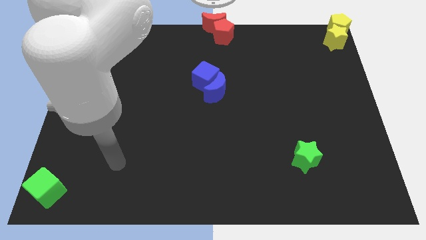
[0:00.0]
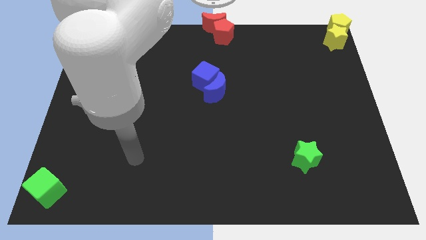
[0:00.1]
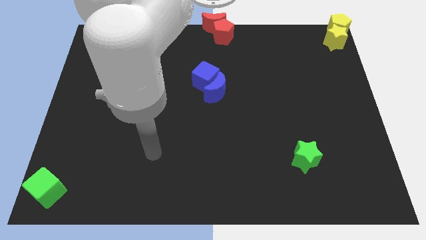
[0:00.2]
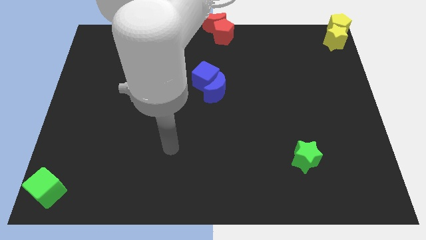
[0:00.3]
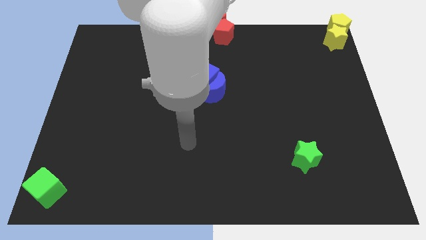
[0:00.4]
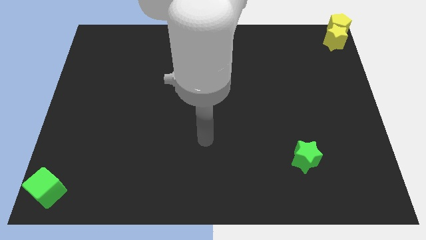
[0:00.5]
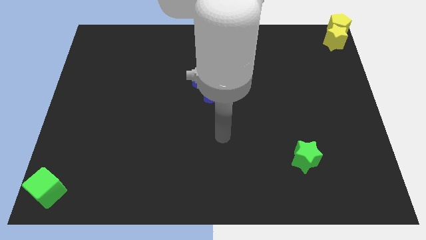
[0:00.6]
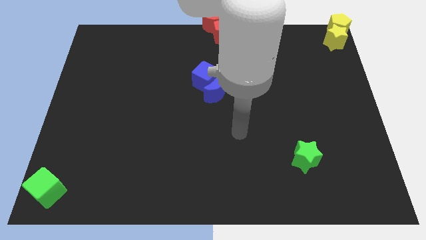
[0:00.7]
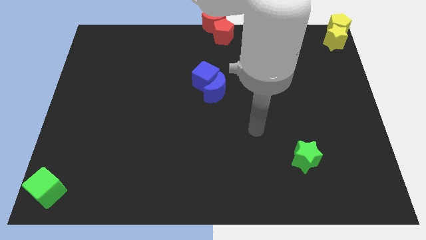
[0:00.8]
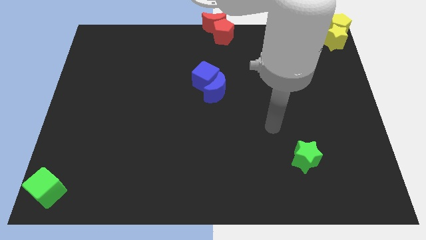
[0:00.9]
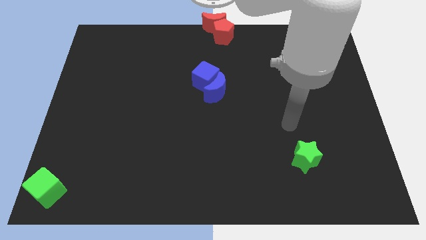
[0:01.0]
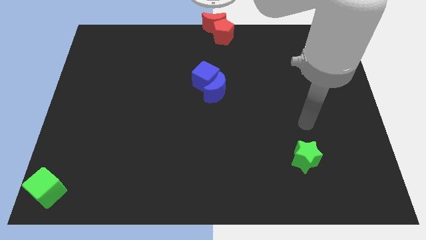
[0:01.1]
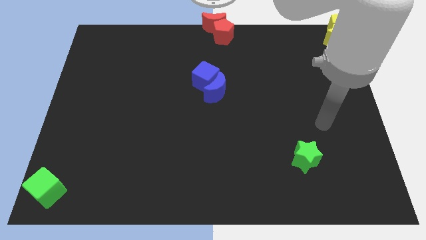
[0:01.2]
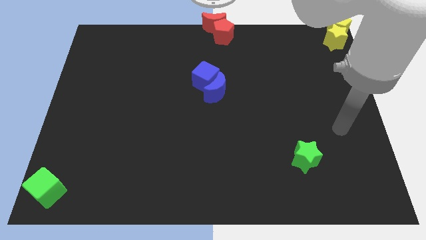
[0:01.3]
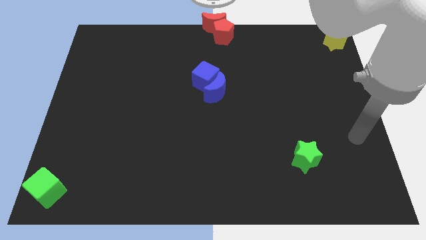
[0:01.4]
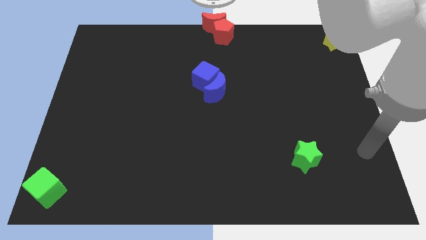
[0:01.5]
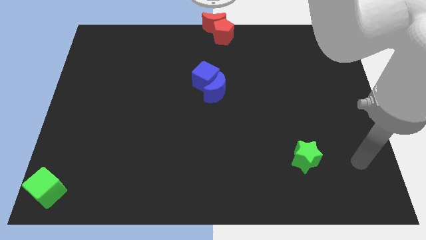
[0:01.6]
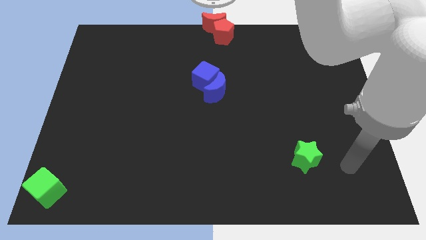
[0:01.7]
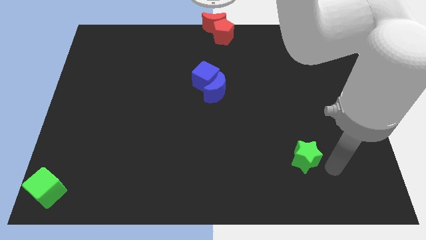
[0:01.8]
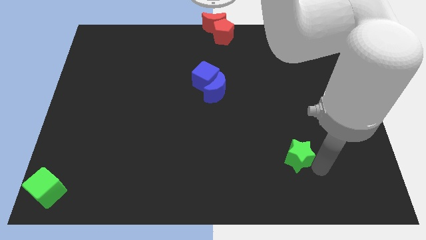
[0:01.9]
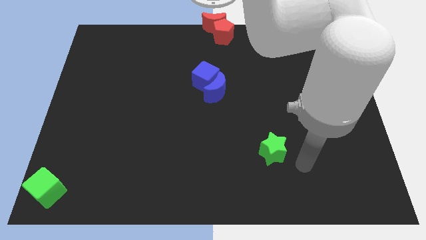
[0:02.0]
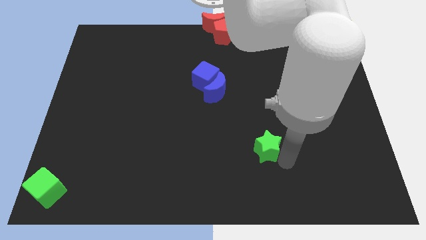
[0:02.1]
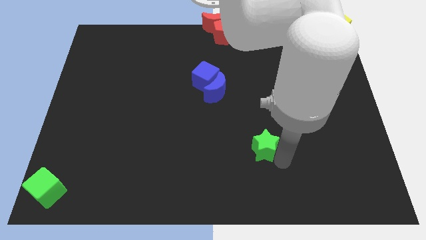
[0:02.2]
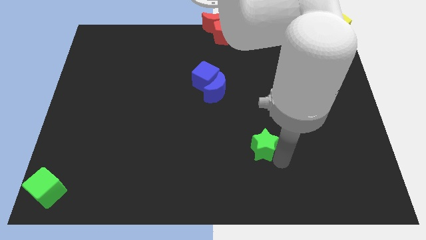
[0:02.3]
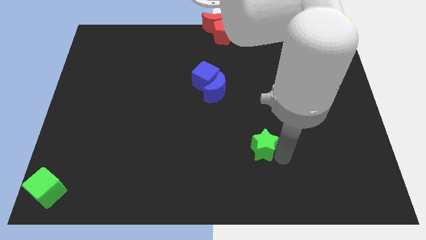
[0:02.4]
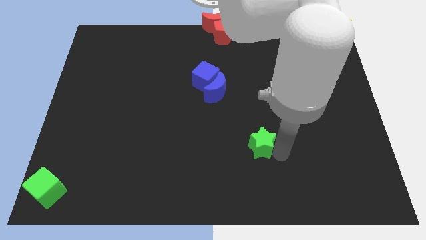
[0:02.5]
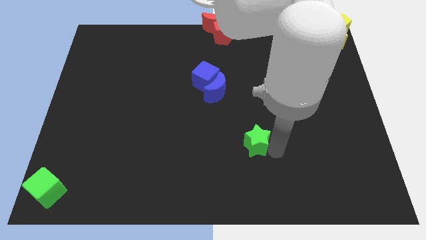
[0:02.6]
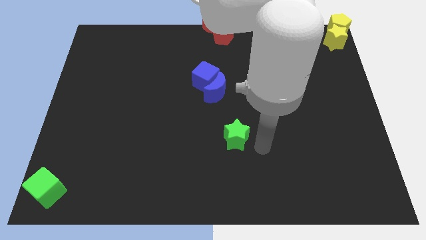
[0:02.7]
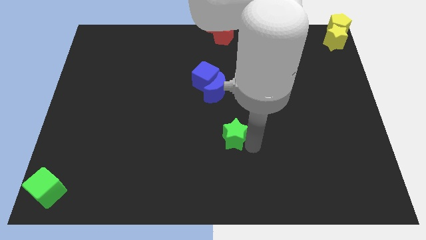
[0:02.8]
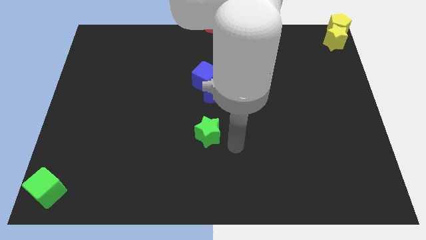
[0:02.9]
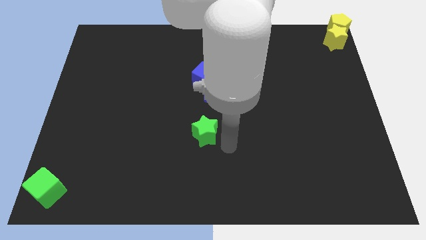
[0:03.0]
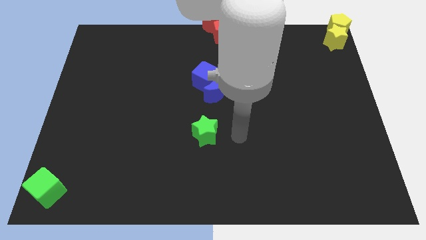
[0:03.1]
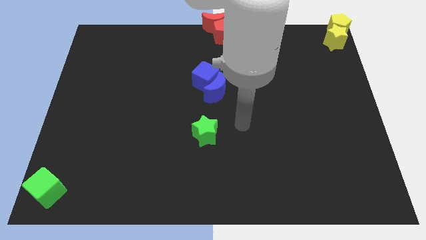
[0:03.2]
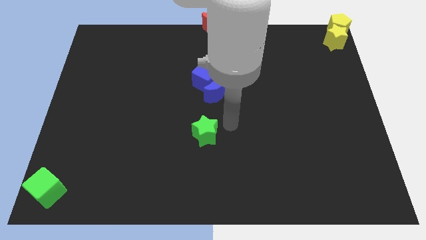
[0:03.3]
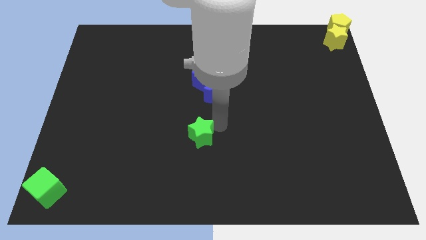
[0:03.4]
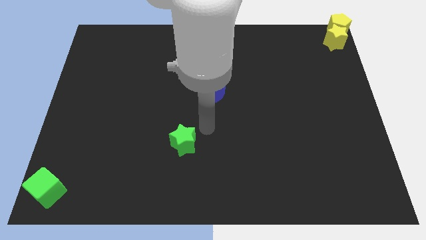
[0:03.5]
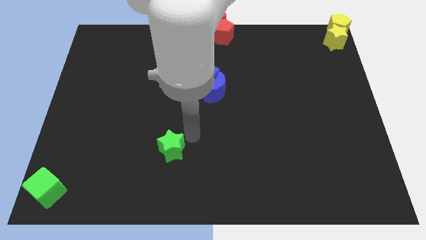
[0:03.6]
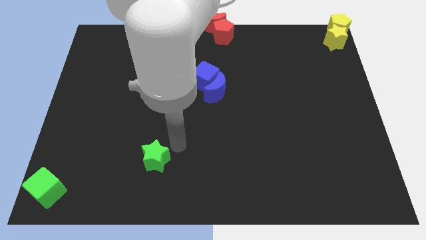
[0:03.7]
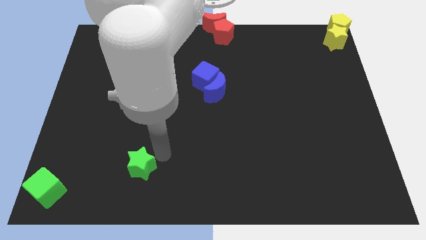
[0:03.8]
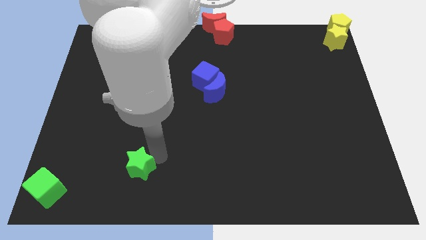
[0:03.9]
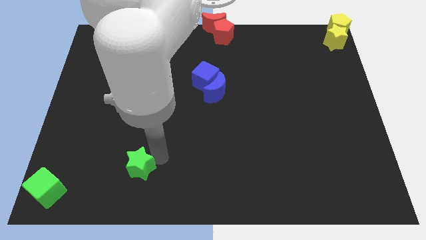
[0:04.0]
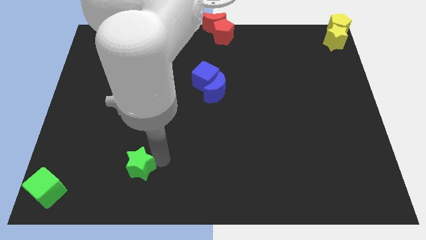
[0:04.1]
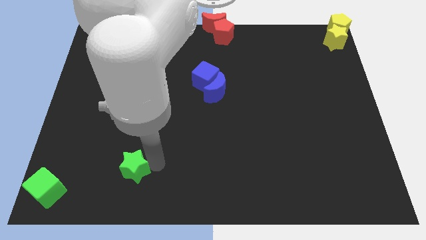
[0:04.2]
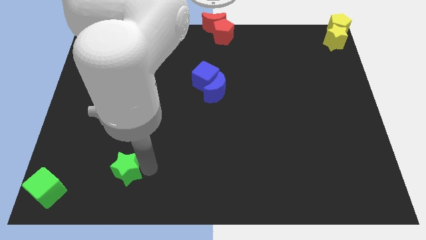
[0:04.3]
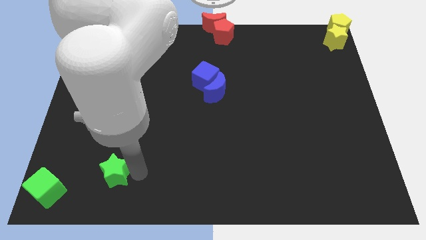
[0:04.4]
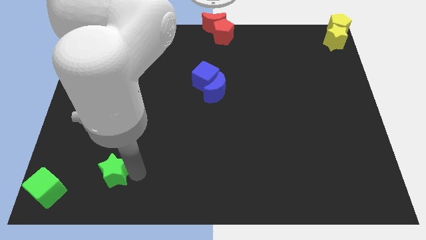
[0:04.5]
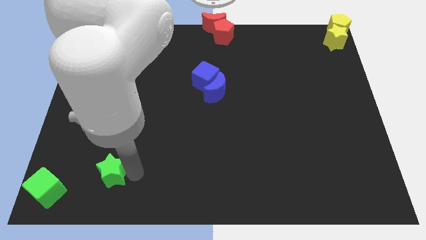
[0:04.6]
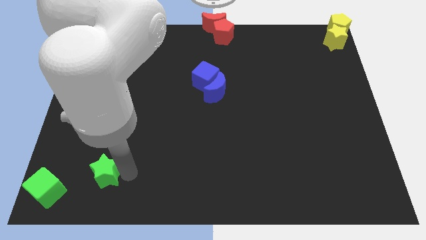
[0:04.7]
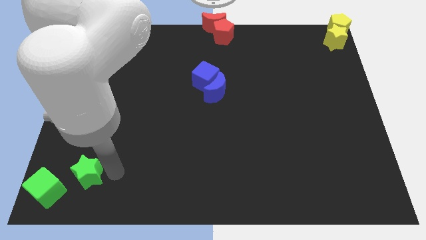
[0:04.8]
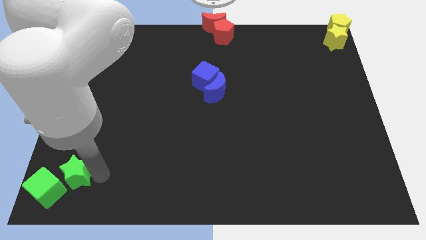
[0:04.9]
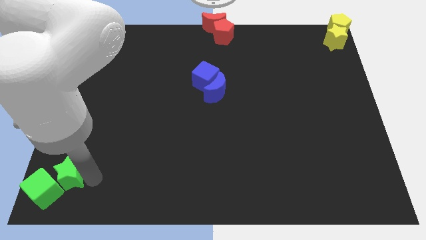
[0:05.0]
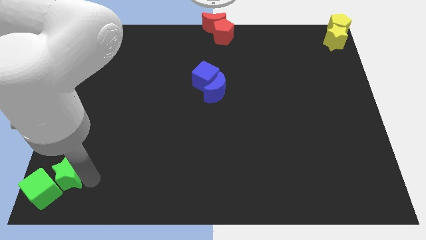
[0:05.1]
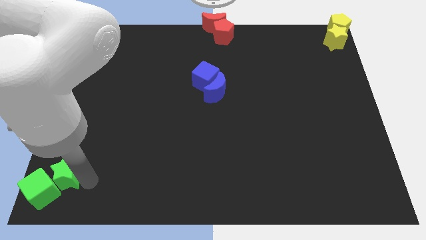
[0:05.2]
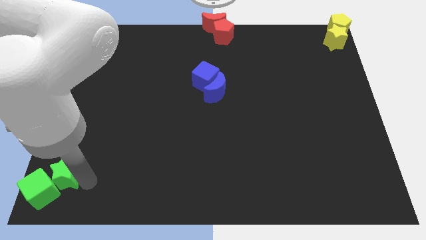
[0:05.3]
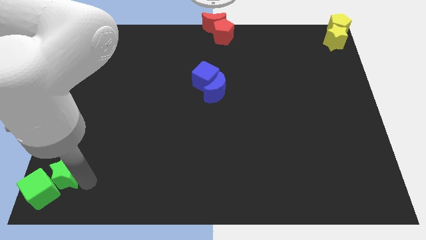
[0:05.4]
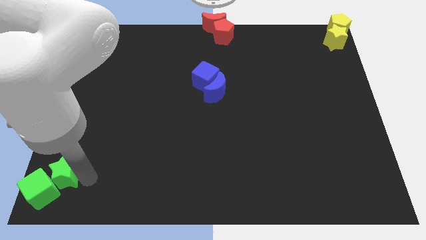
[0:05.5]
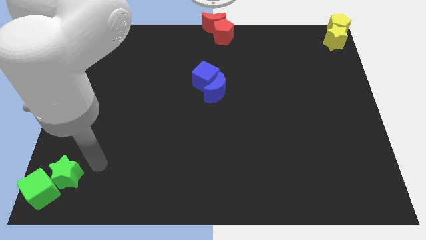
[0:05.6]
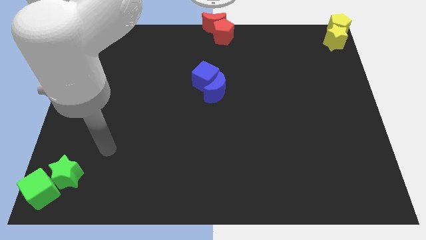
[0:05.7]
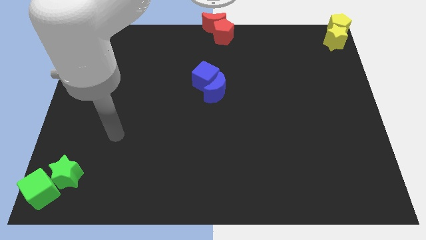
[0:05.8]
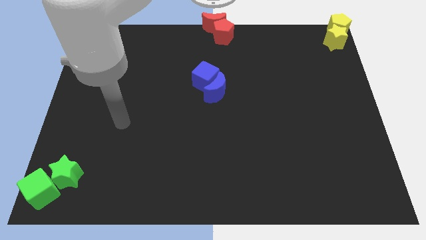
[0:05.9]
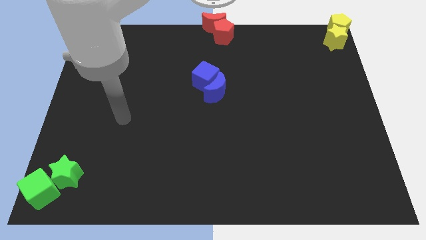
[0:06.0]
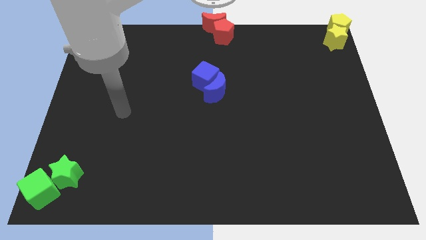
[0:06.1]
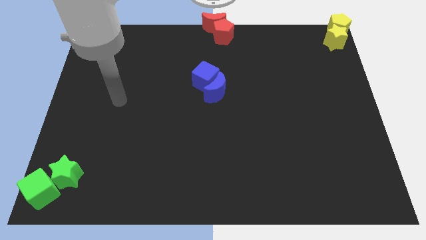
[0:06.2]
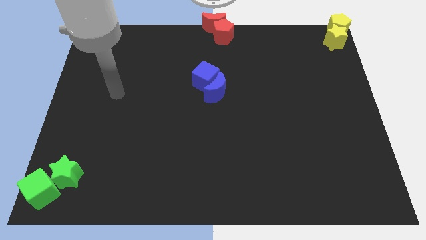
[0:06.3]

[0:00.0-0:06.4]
push the green star into the green cube

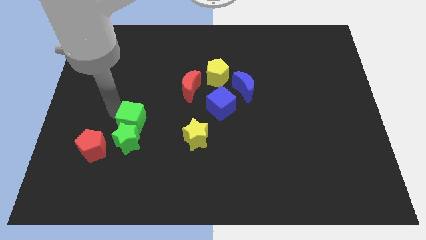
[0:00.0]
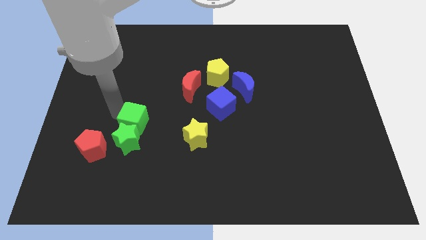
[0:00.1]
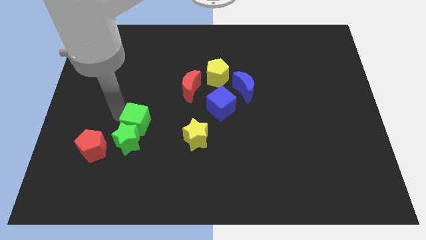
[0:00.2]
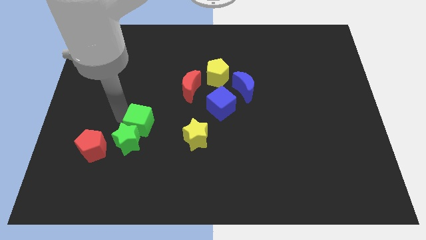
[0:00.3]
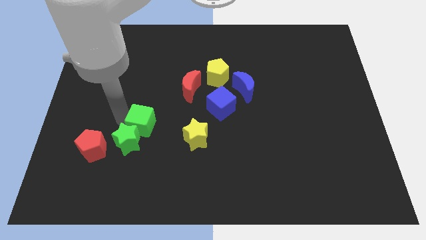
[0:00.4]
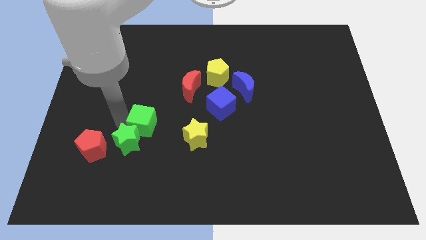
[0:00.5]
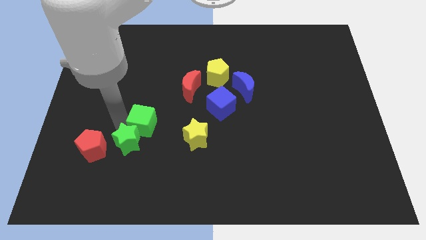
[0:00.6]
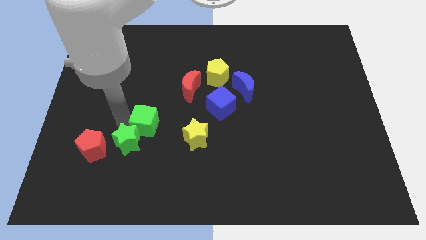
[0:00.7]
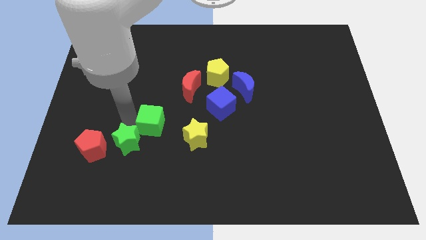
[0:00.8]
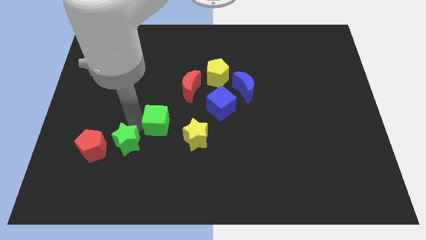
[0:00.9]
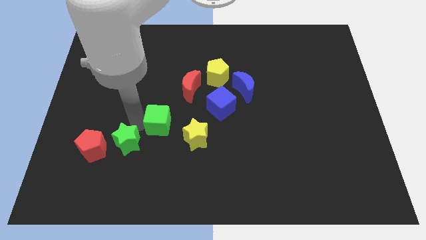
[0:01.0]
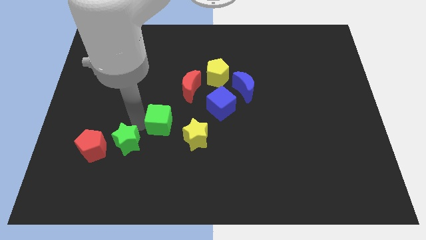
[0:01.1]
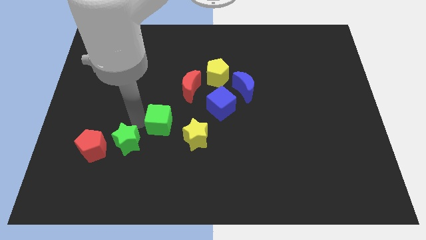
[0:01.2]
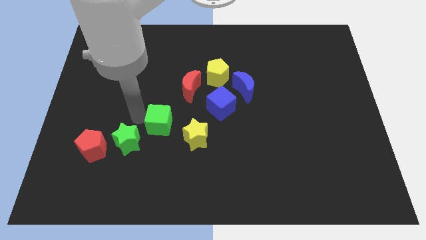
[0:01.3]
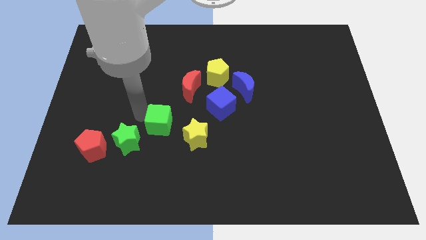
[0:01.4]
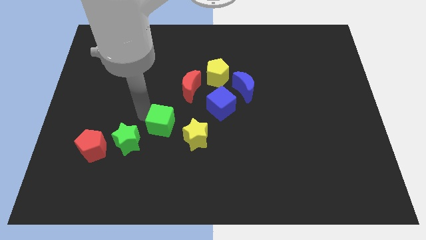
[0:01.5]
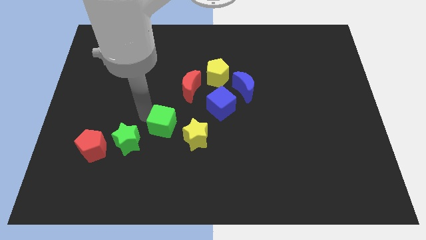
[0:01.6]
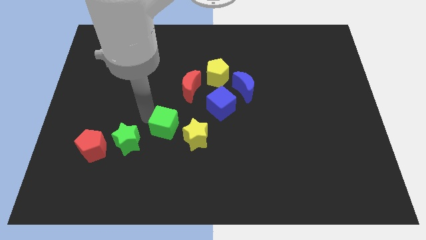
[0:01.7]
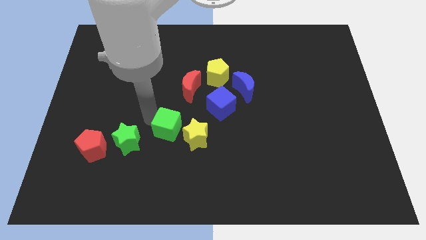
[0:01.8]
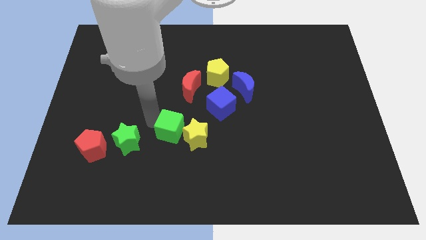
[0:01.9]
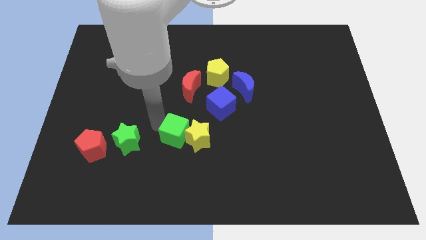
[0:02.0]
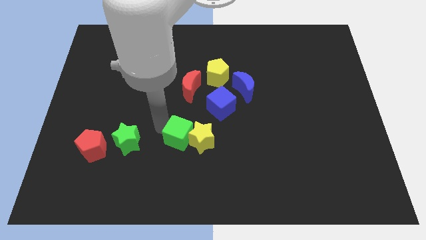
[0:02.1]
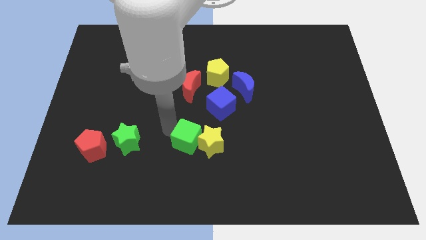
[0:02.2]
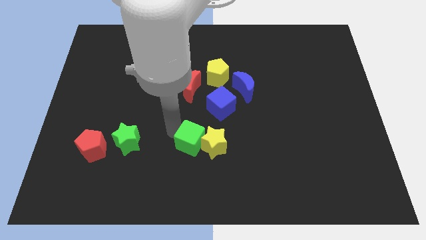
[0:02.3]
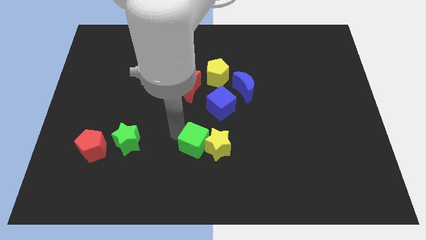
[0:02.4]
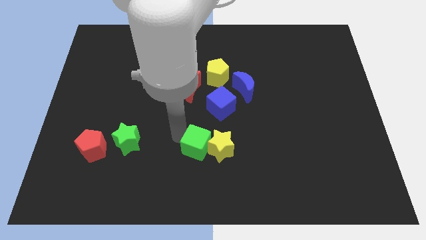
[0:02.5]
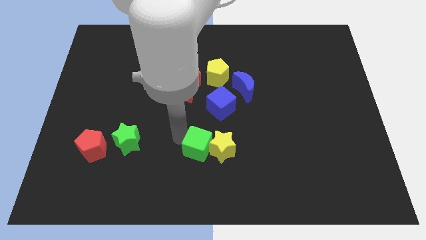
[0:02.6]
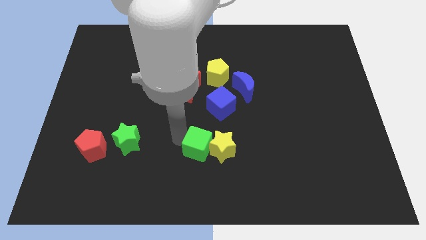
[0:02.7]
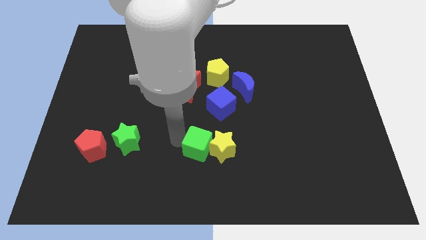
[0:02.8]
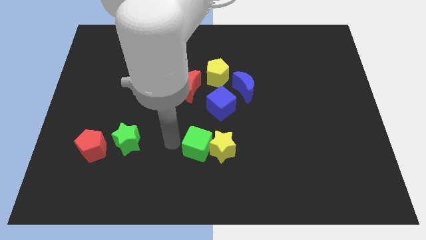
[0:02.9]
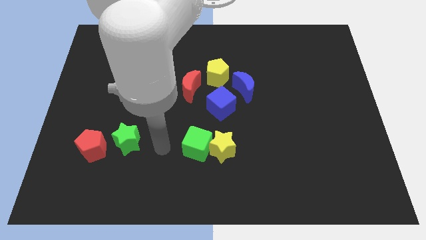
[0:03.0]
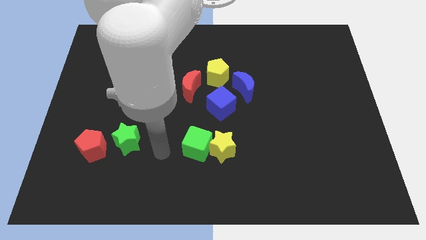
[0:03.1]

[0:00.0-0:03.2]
push the green cube into yellow star to the left
